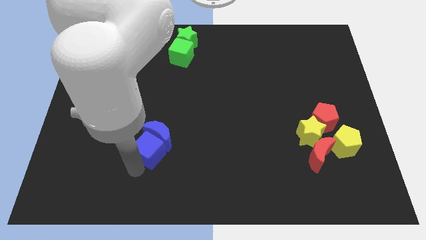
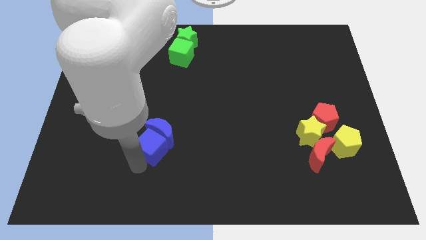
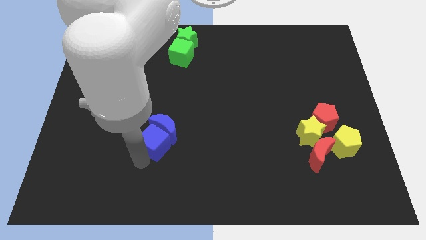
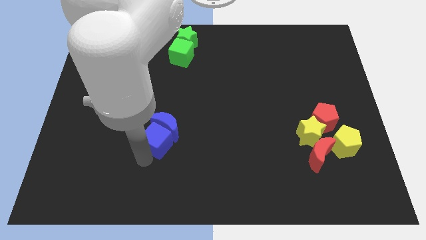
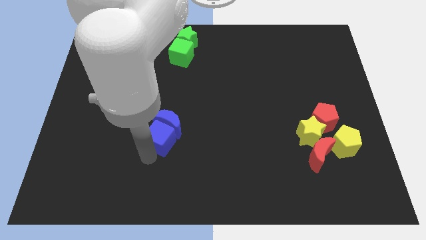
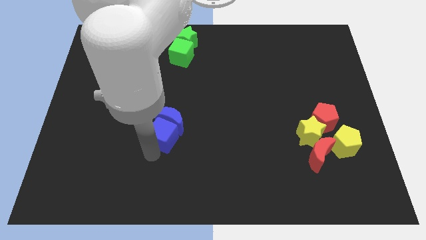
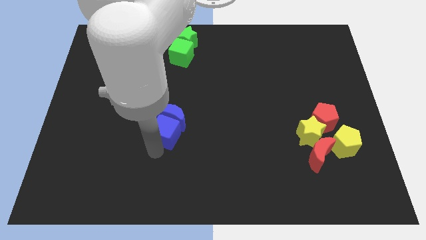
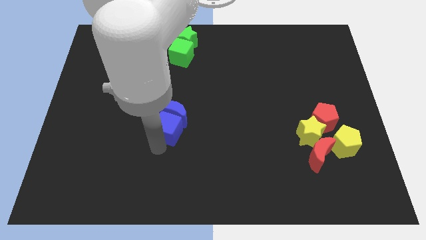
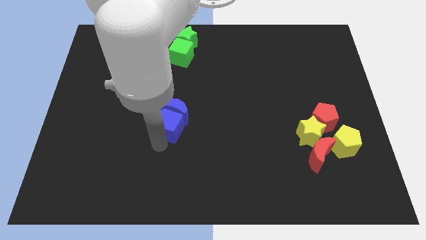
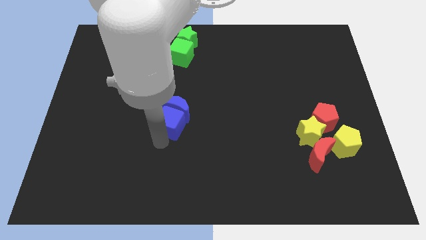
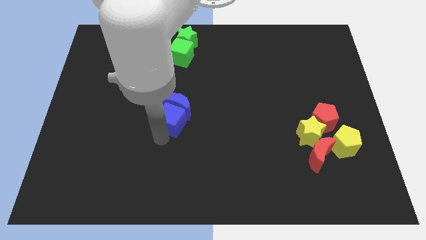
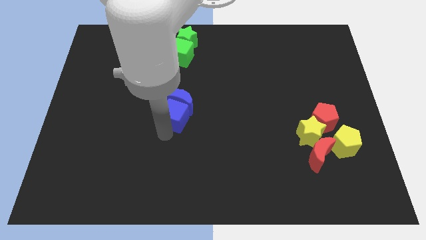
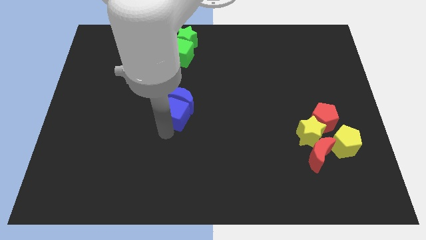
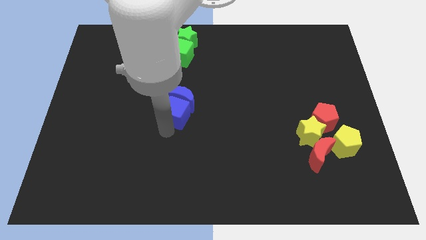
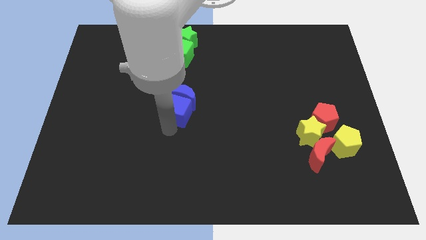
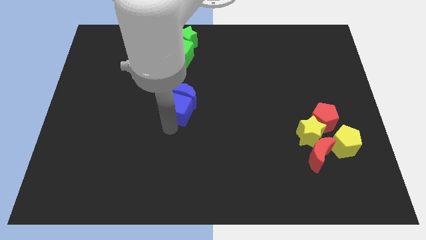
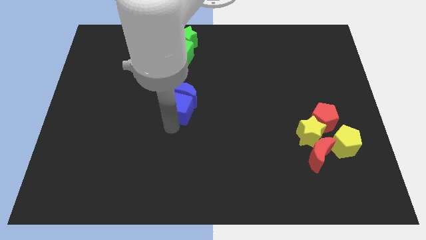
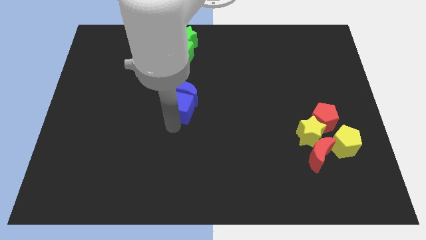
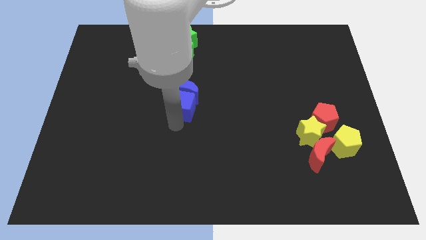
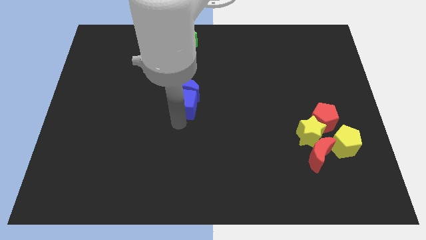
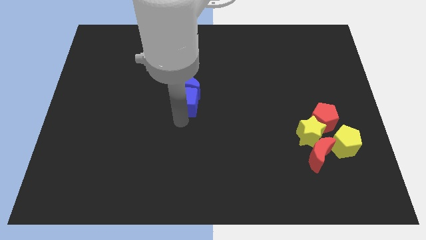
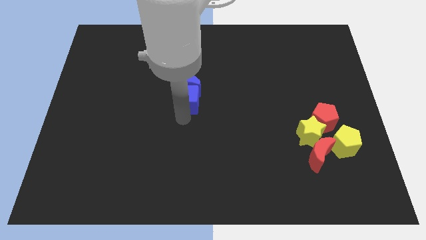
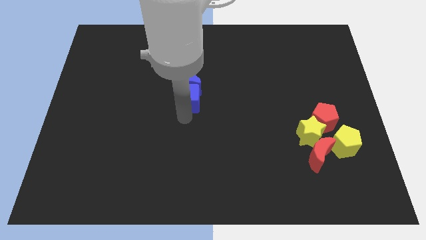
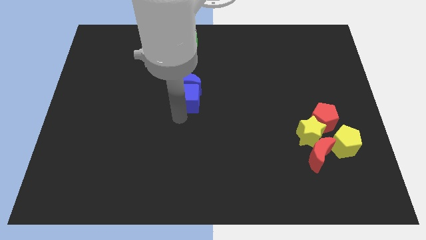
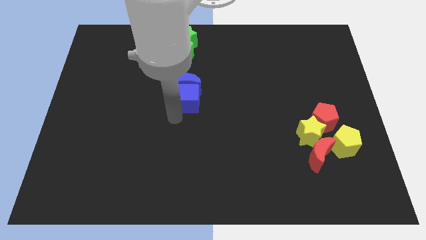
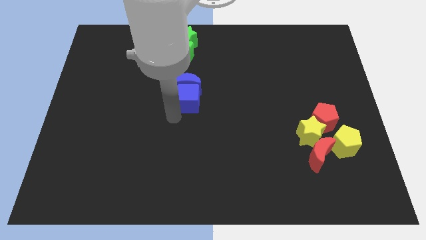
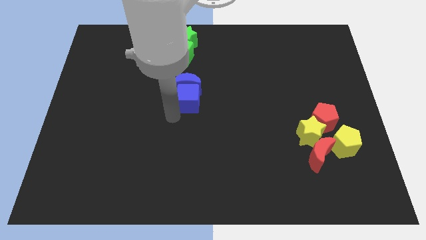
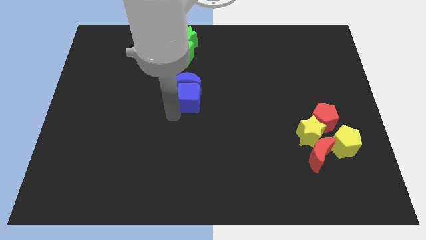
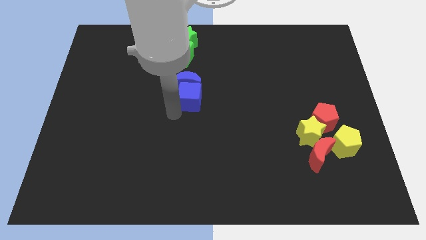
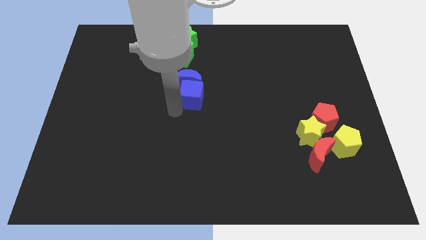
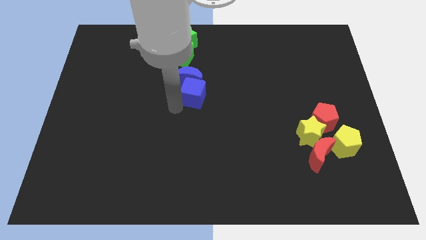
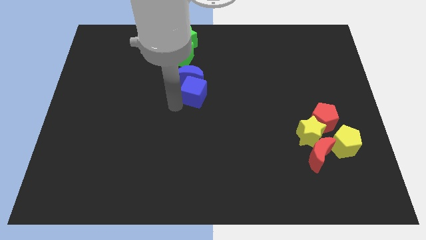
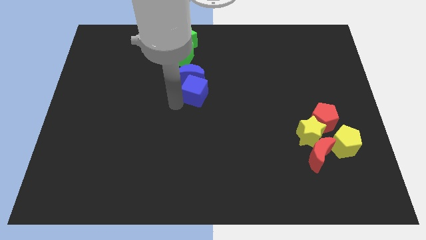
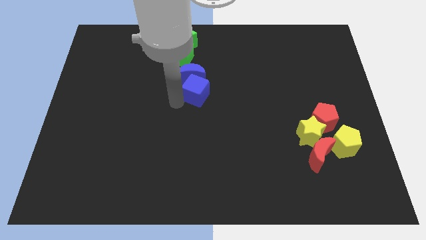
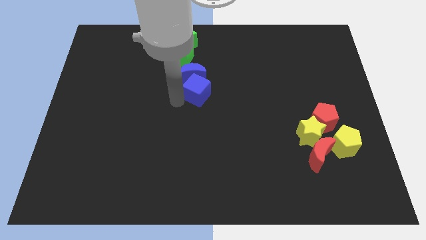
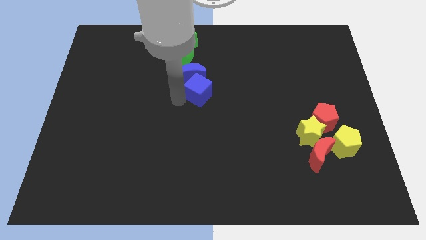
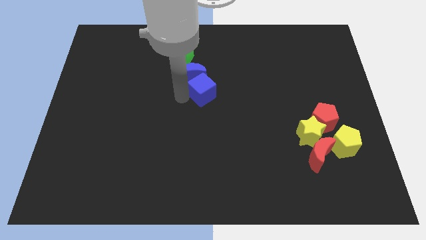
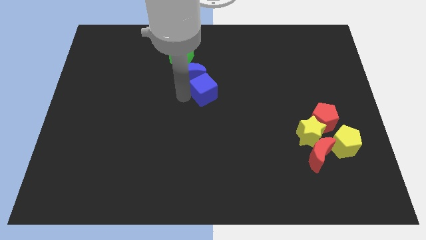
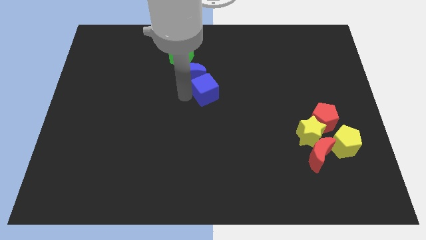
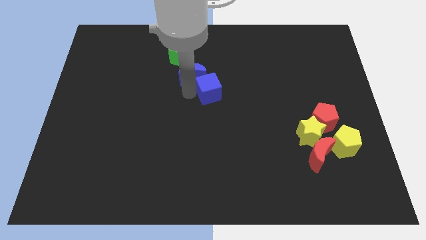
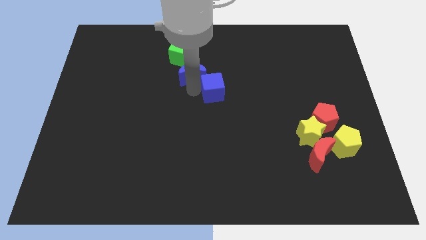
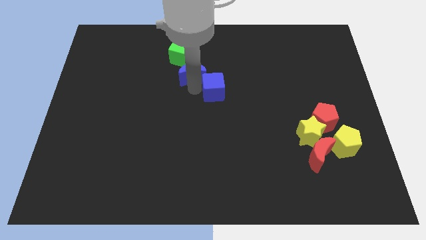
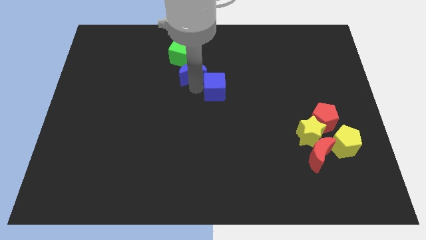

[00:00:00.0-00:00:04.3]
push blue blocks near to green blocks

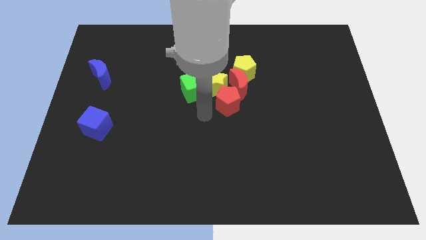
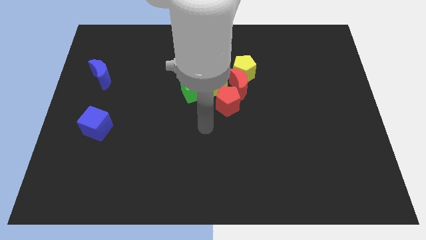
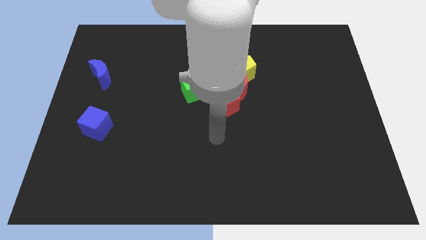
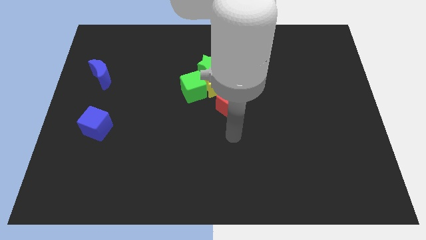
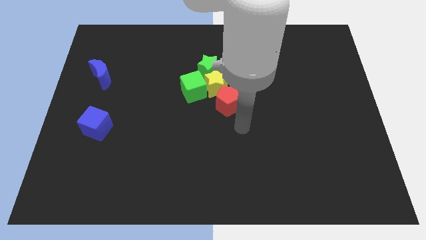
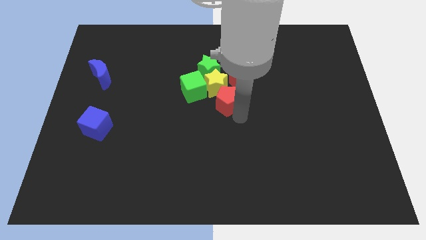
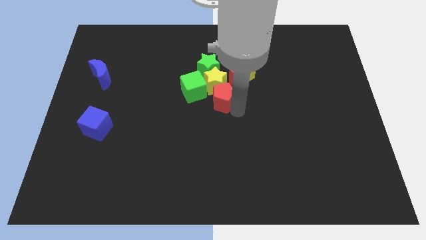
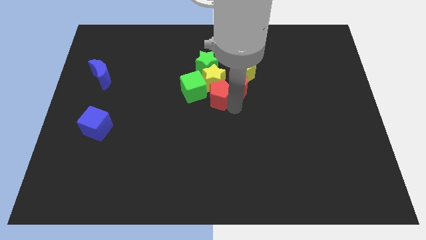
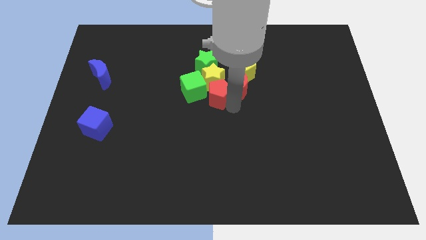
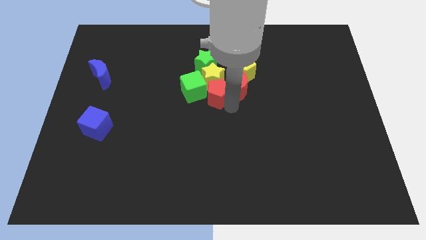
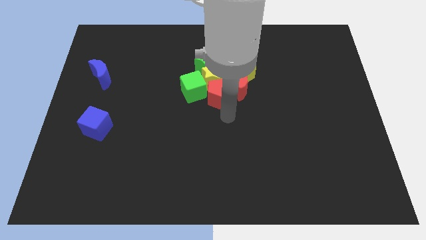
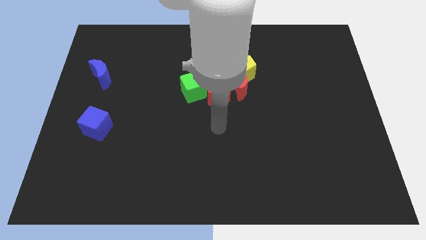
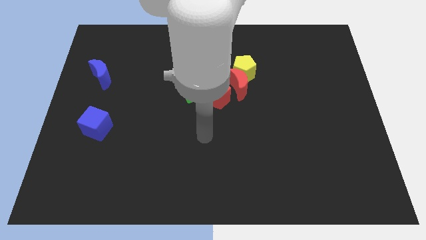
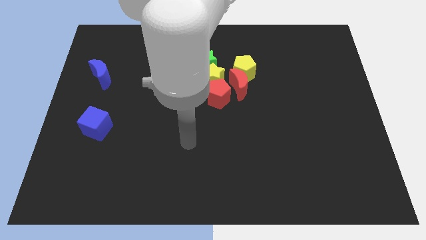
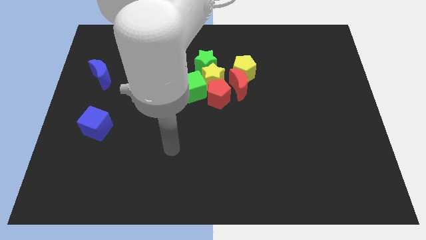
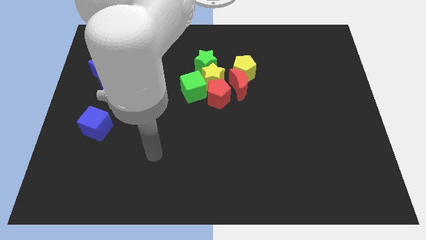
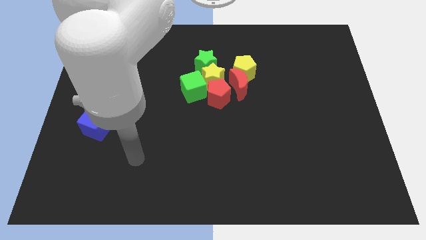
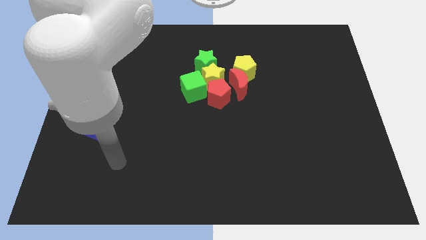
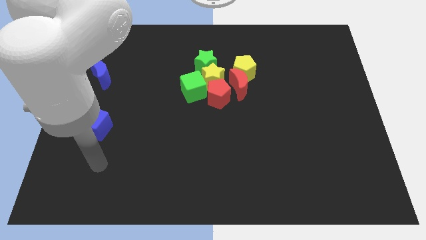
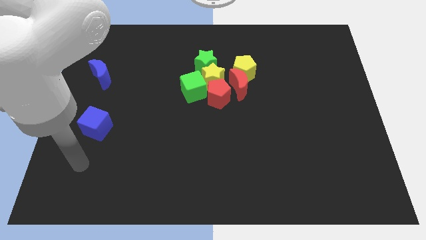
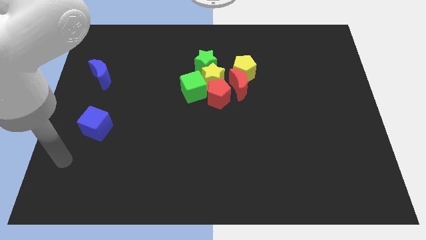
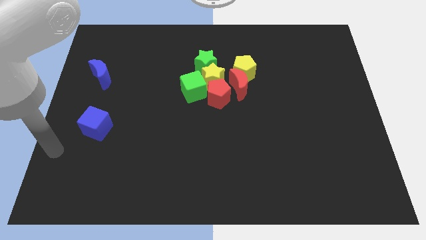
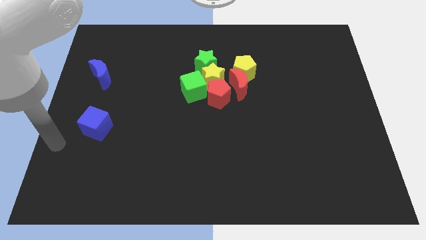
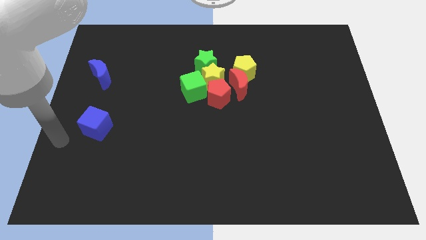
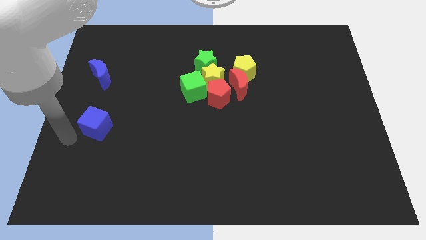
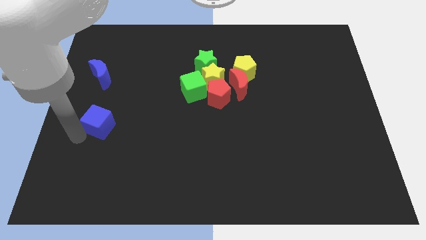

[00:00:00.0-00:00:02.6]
slightly move red pentagon towards upward

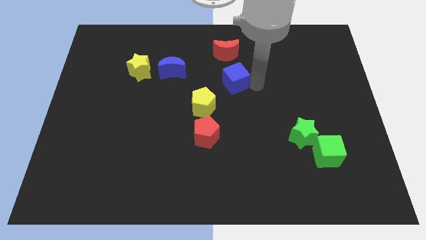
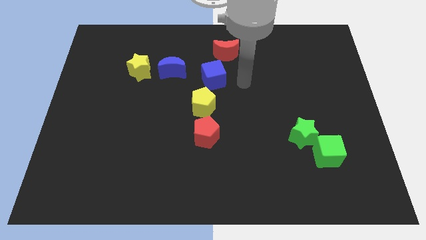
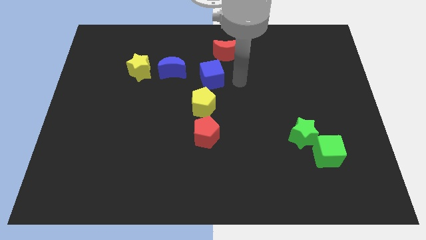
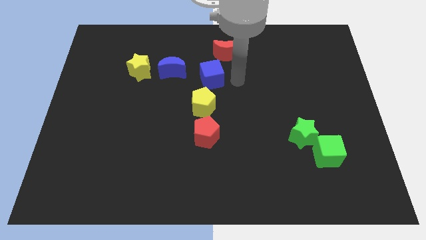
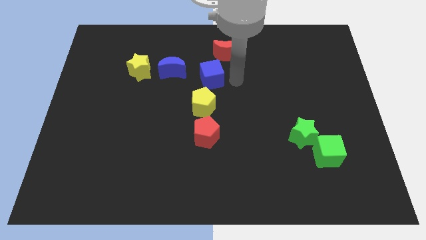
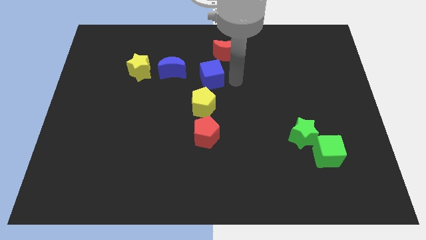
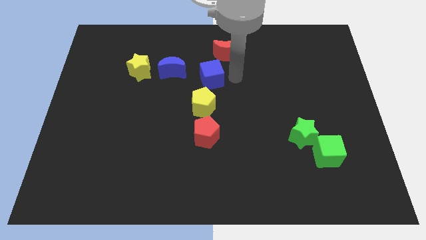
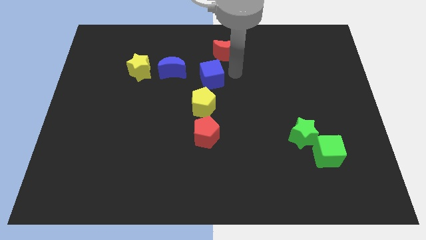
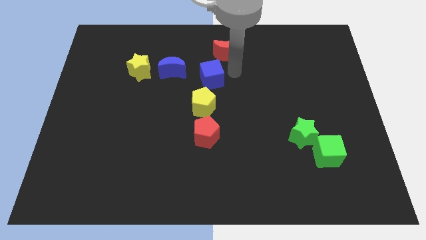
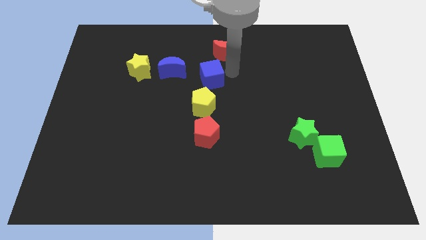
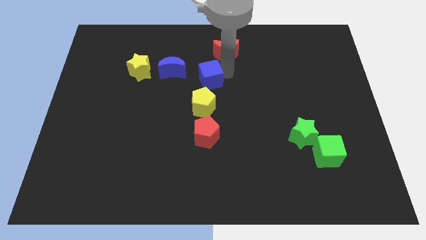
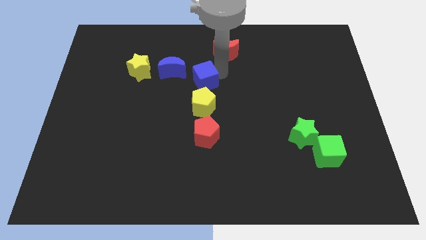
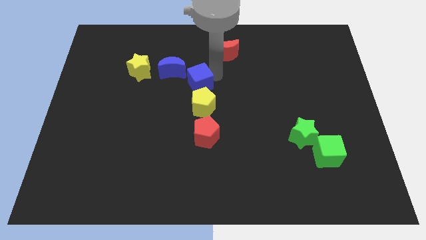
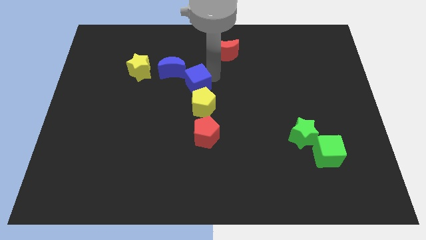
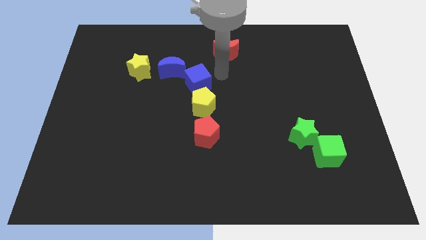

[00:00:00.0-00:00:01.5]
move the blue cube to the right of the blue crescent

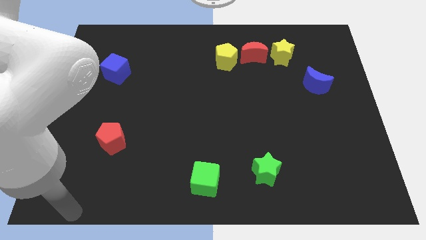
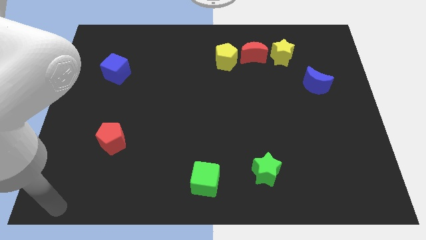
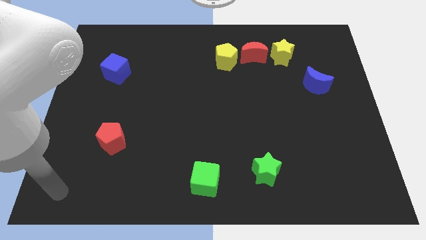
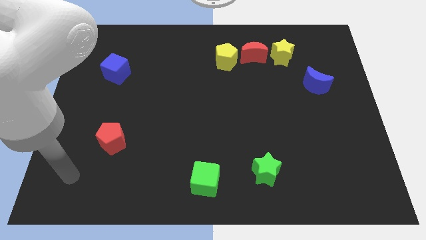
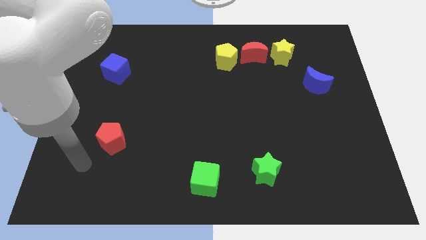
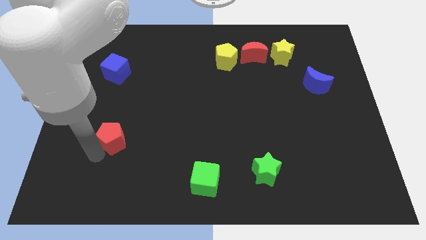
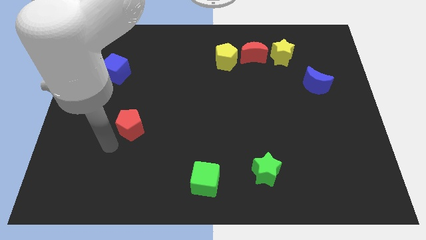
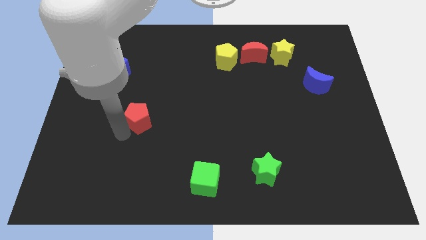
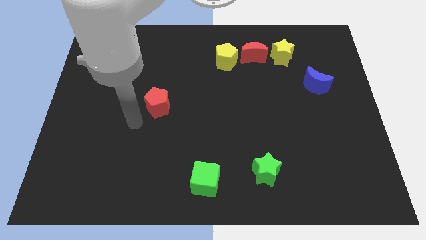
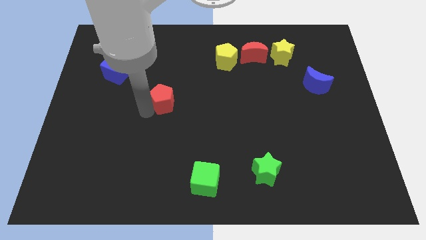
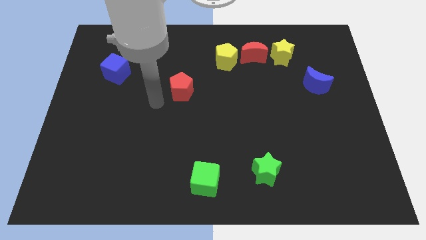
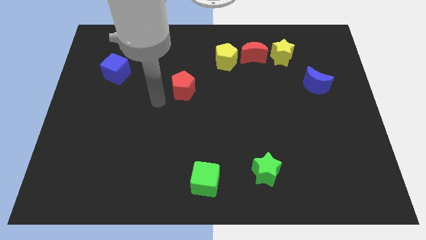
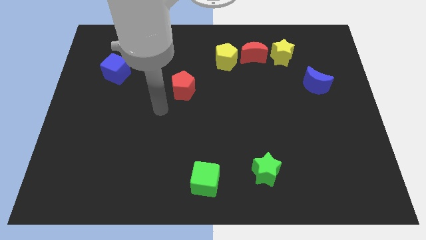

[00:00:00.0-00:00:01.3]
slide the red pentagon towards the yellow pentagon
